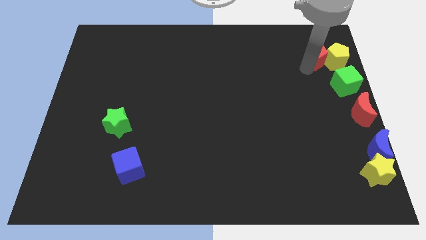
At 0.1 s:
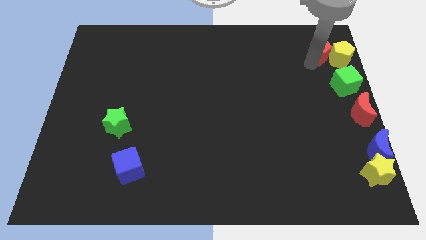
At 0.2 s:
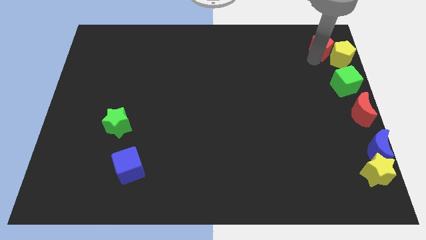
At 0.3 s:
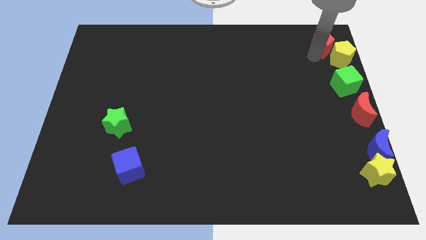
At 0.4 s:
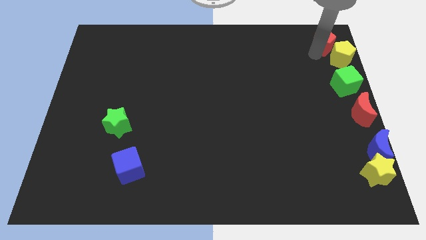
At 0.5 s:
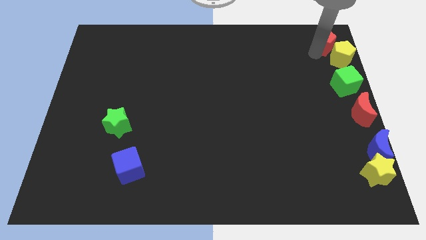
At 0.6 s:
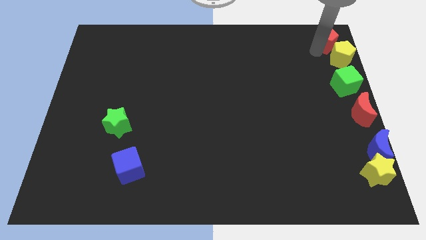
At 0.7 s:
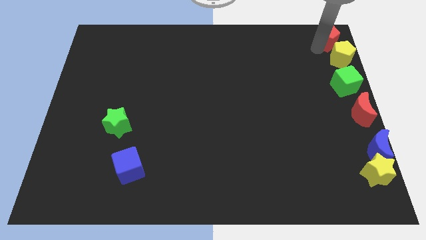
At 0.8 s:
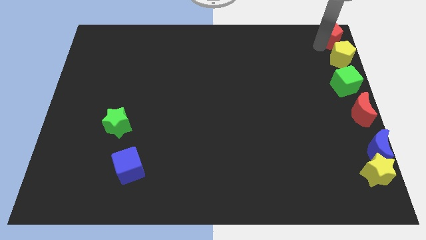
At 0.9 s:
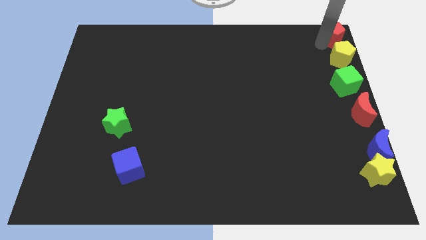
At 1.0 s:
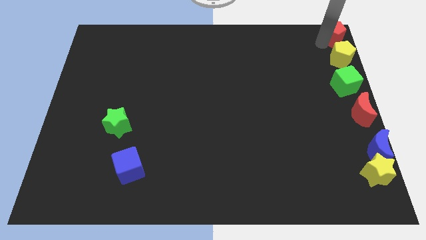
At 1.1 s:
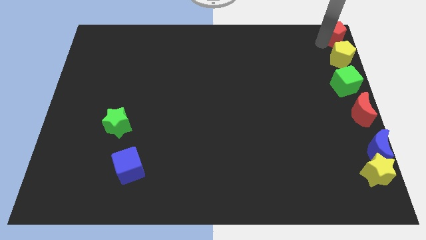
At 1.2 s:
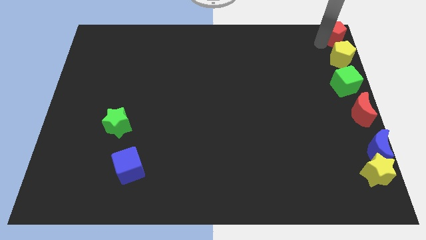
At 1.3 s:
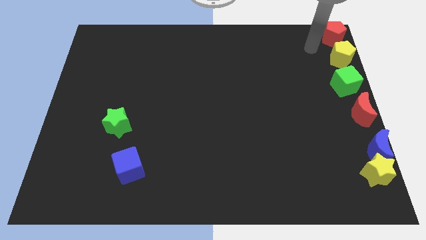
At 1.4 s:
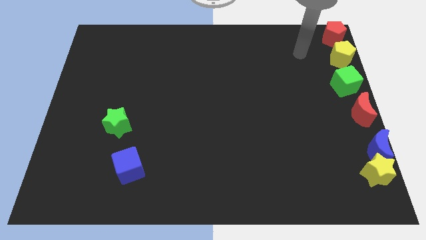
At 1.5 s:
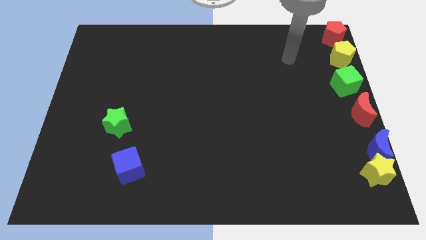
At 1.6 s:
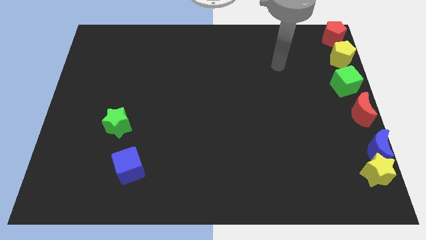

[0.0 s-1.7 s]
place the red pentagon above the yellow pentagon

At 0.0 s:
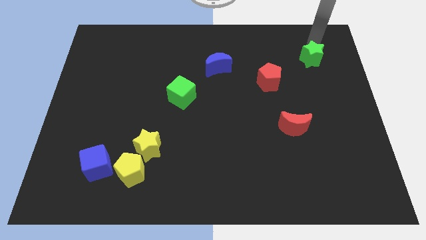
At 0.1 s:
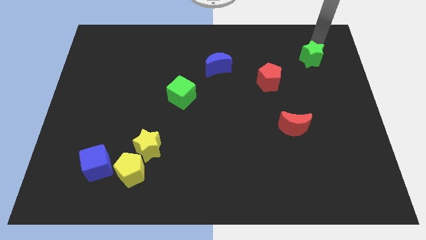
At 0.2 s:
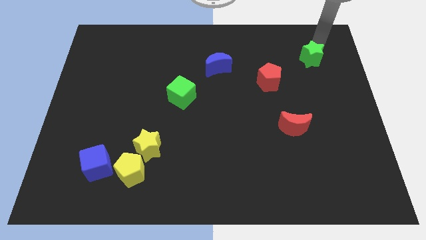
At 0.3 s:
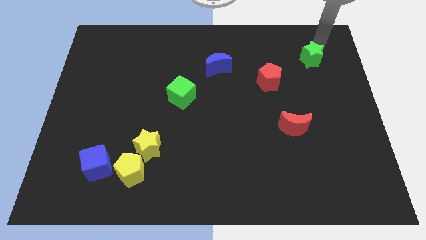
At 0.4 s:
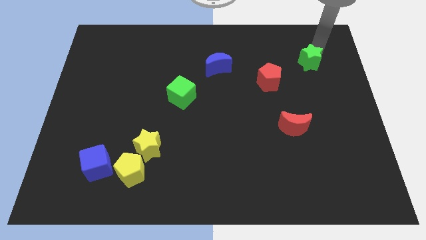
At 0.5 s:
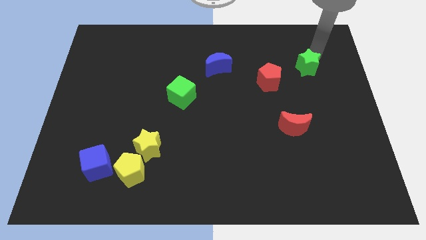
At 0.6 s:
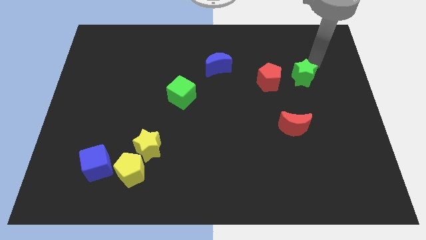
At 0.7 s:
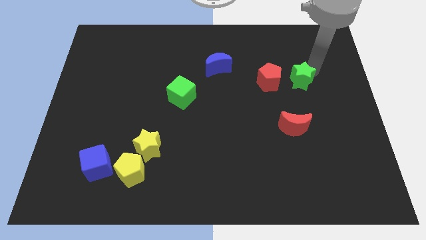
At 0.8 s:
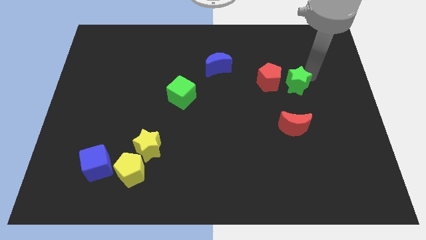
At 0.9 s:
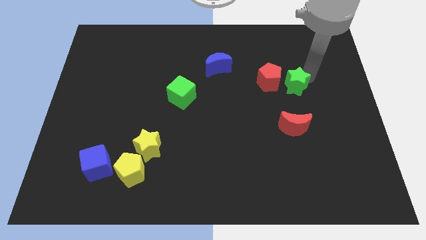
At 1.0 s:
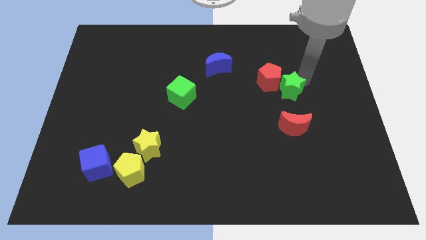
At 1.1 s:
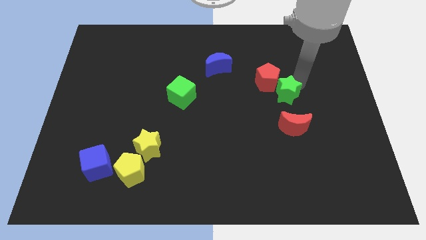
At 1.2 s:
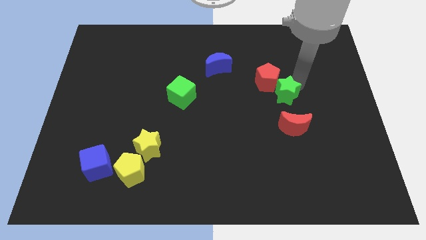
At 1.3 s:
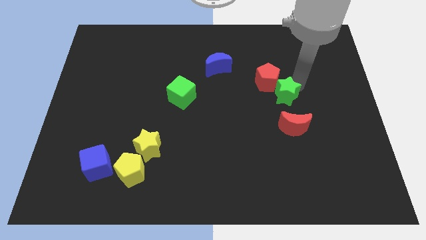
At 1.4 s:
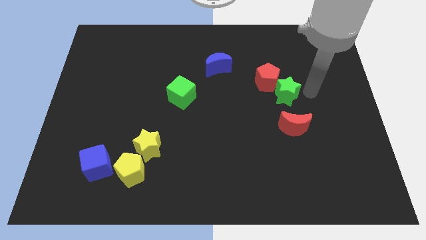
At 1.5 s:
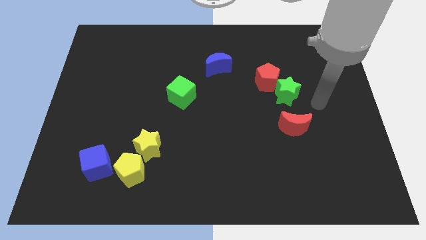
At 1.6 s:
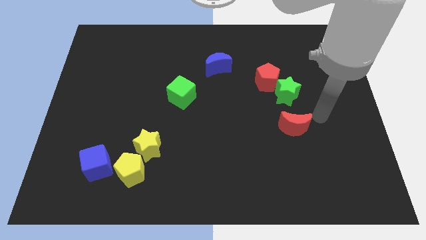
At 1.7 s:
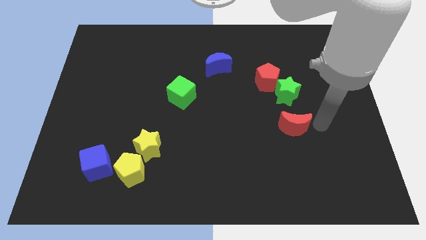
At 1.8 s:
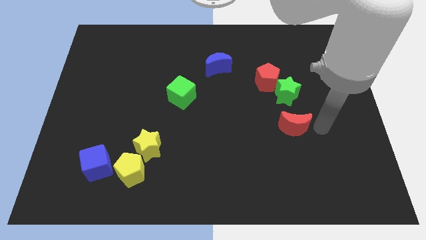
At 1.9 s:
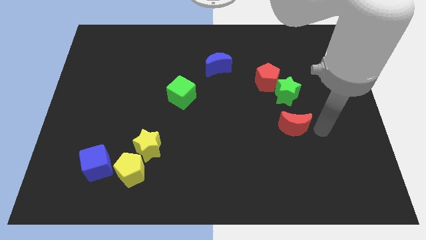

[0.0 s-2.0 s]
attach the green star to the red pentagon

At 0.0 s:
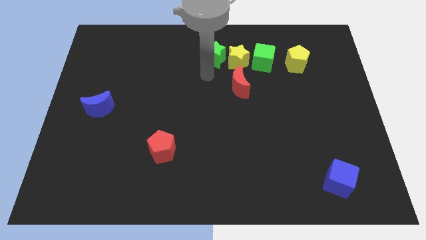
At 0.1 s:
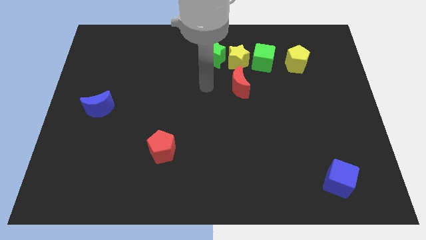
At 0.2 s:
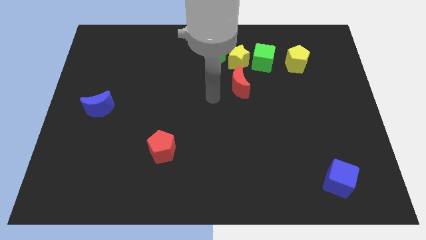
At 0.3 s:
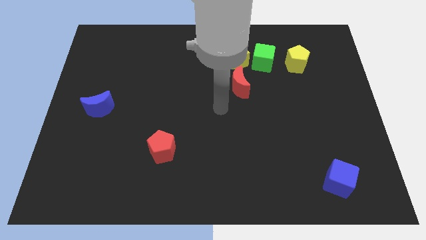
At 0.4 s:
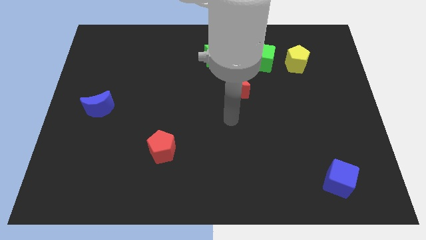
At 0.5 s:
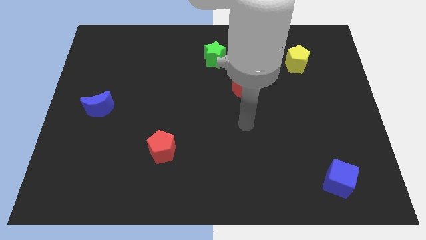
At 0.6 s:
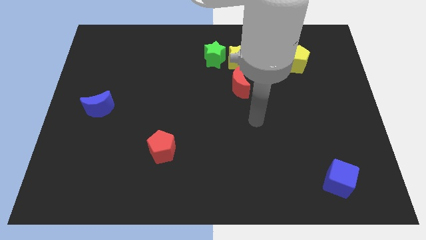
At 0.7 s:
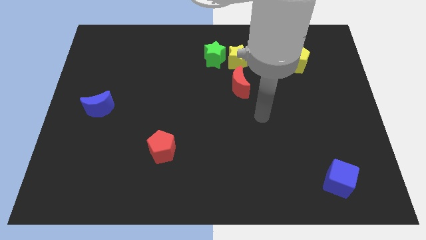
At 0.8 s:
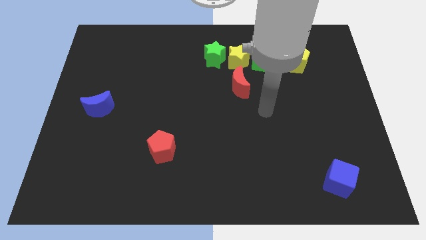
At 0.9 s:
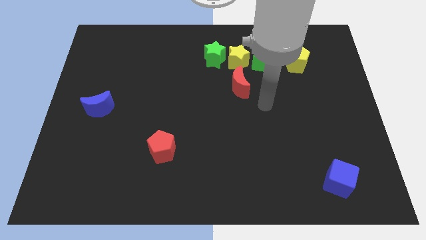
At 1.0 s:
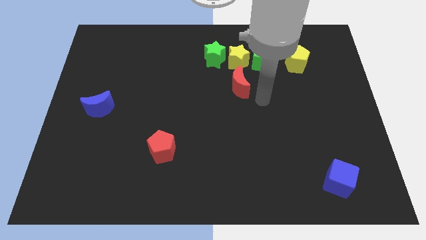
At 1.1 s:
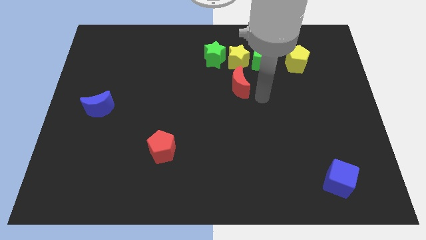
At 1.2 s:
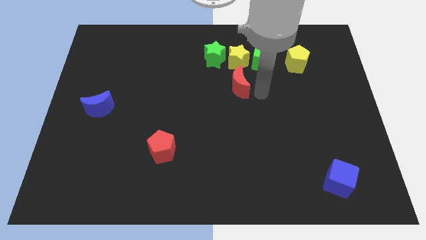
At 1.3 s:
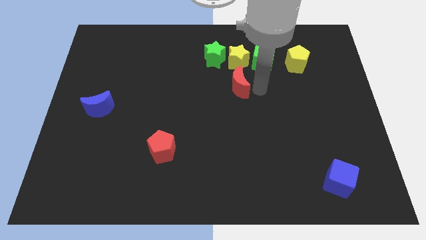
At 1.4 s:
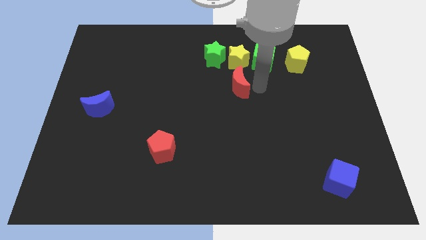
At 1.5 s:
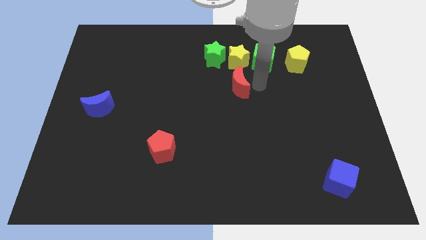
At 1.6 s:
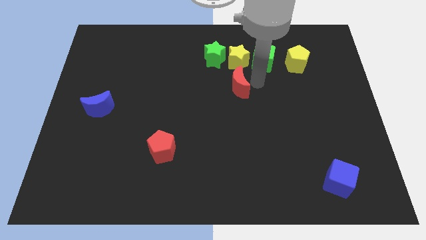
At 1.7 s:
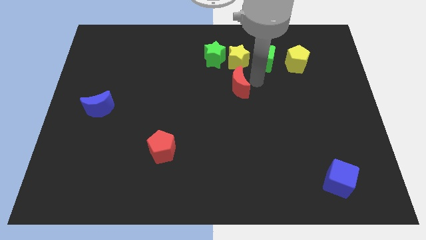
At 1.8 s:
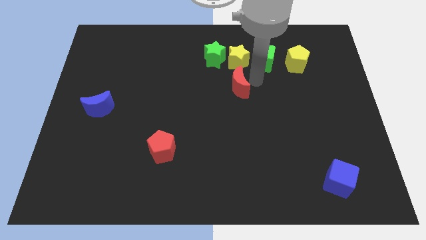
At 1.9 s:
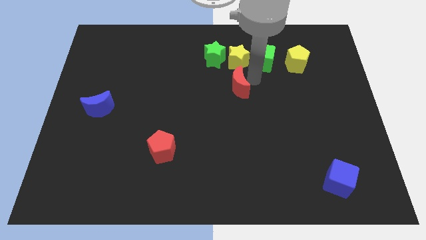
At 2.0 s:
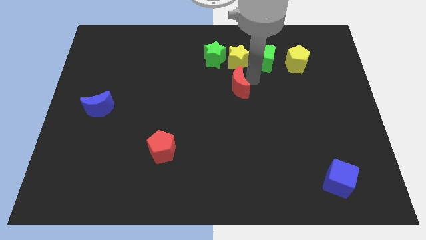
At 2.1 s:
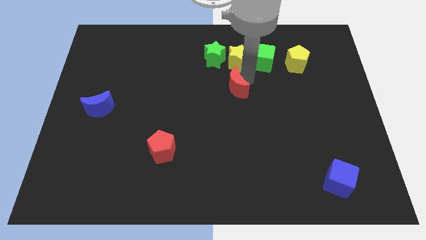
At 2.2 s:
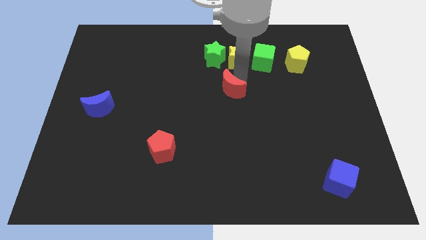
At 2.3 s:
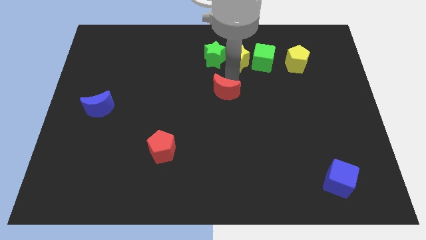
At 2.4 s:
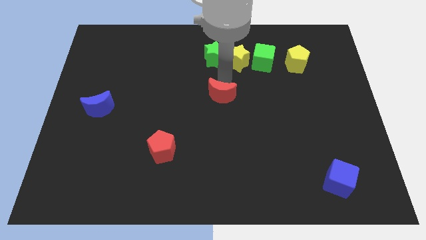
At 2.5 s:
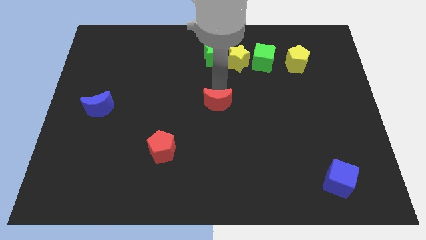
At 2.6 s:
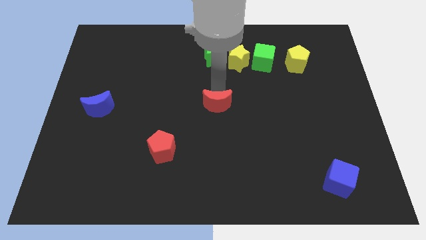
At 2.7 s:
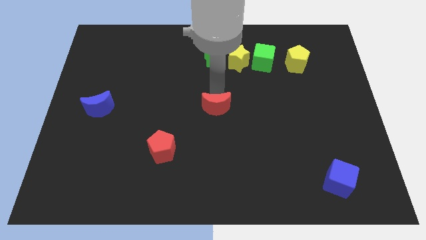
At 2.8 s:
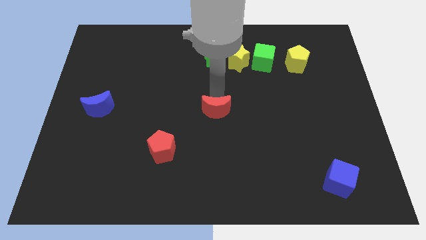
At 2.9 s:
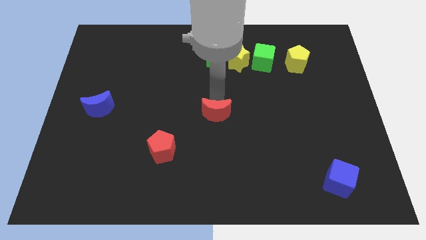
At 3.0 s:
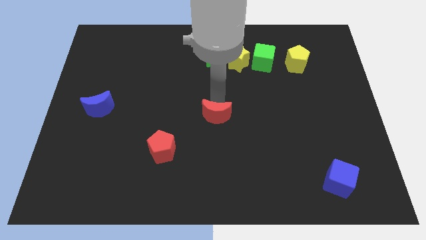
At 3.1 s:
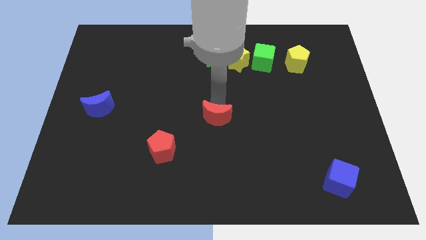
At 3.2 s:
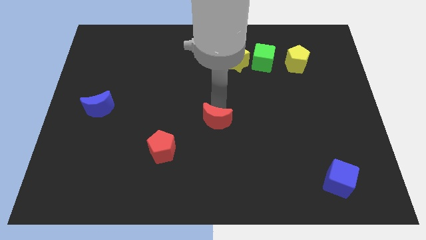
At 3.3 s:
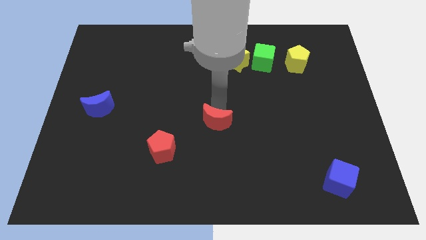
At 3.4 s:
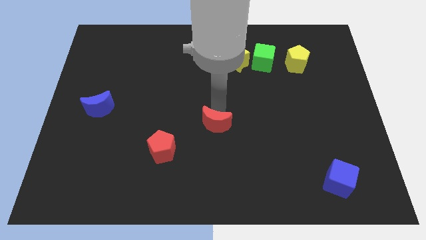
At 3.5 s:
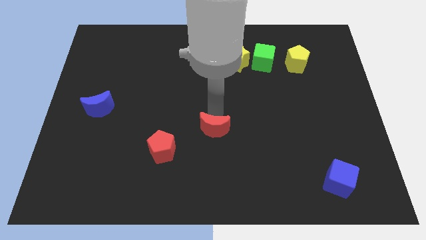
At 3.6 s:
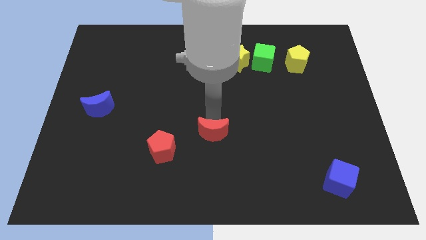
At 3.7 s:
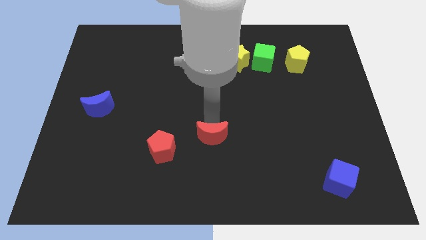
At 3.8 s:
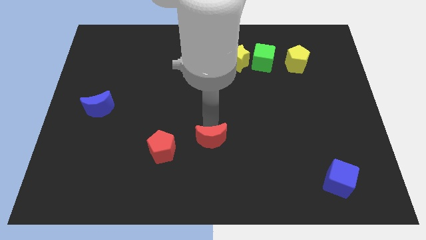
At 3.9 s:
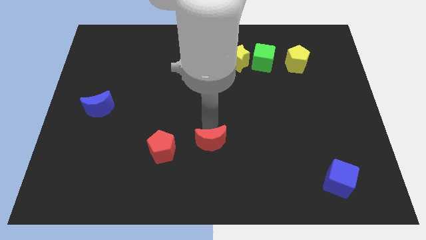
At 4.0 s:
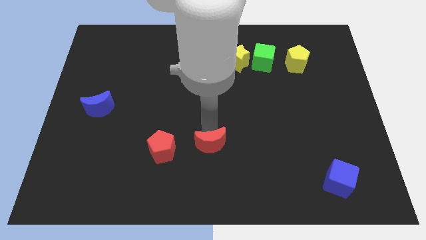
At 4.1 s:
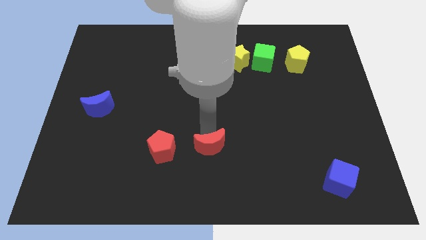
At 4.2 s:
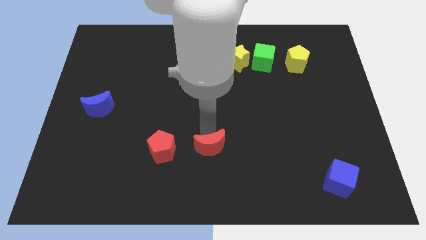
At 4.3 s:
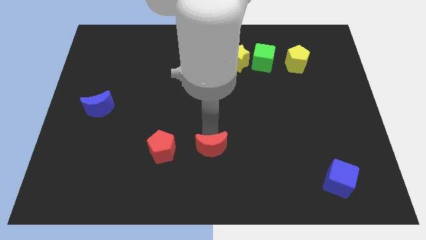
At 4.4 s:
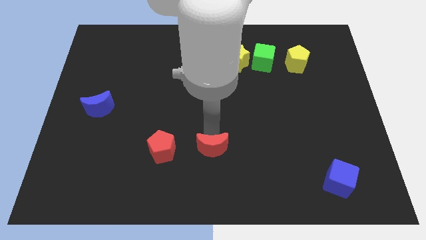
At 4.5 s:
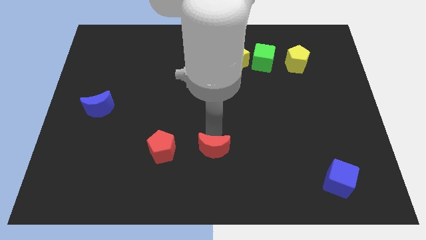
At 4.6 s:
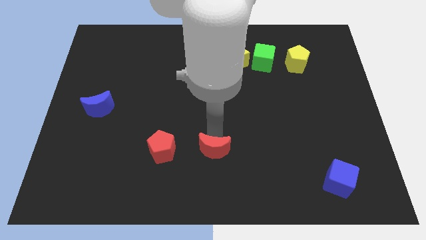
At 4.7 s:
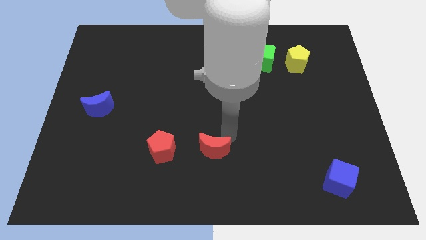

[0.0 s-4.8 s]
move the red moon to the righ side of the red pentagon

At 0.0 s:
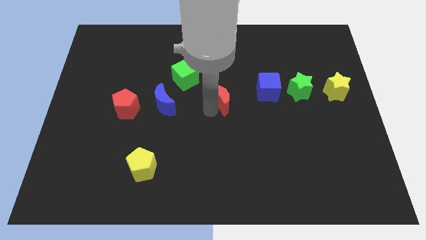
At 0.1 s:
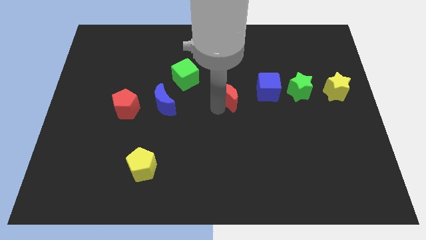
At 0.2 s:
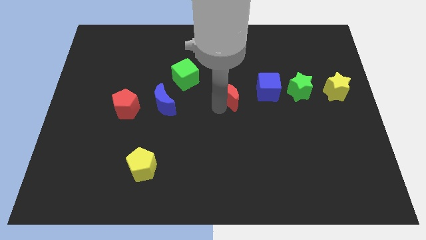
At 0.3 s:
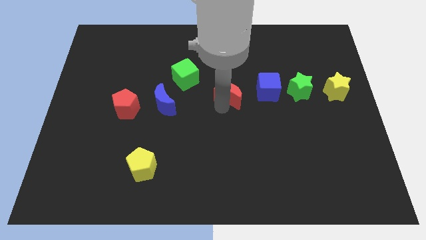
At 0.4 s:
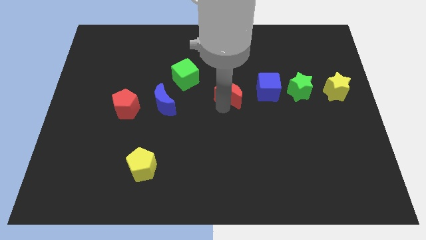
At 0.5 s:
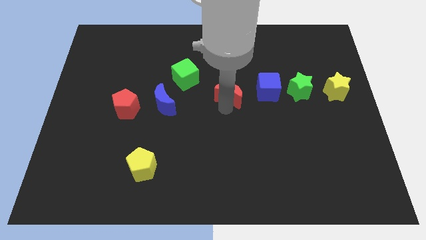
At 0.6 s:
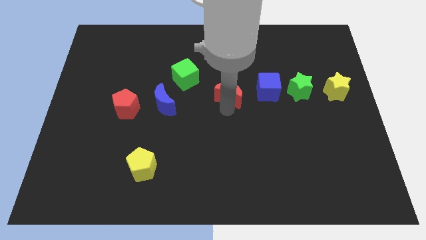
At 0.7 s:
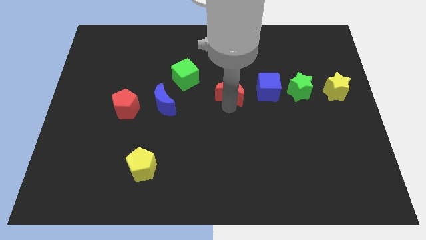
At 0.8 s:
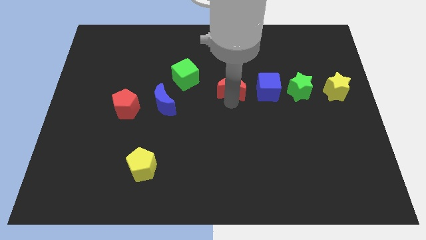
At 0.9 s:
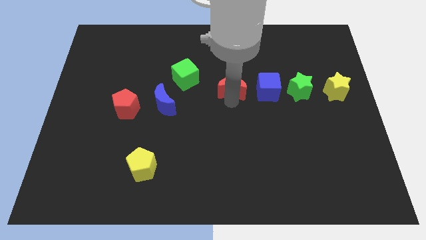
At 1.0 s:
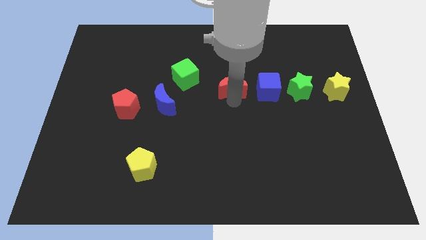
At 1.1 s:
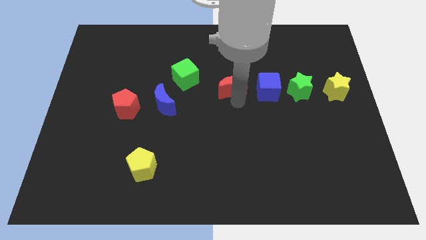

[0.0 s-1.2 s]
move red moon left beside the blue cube
